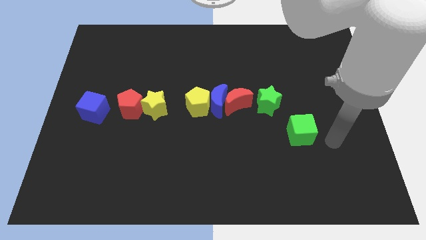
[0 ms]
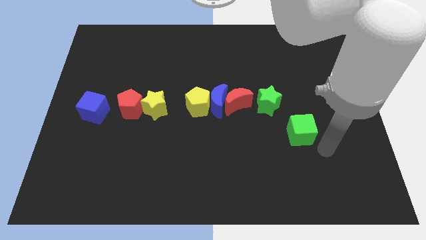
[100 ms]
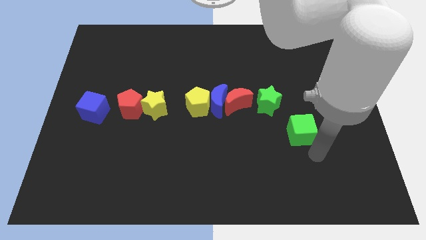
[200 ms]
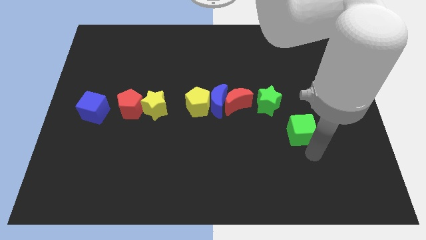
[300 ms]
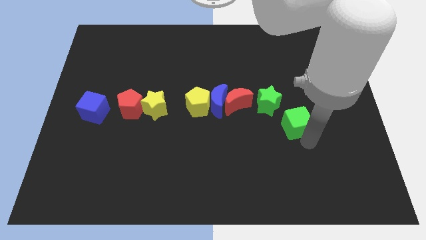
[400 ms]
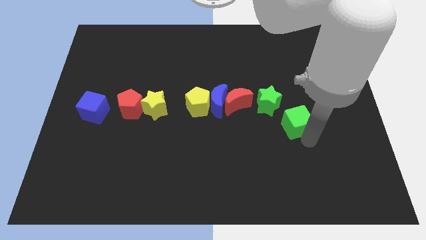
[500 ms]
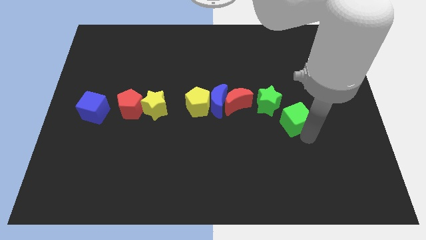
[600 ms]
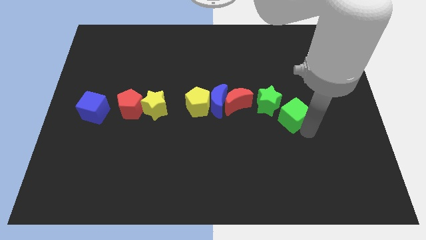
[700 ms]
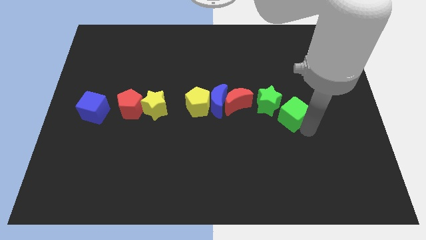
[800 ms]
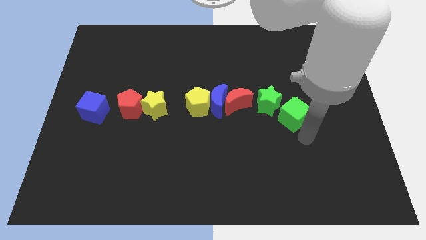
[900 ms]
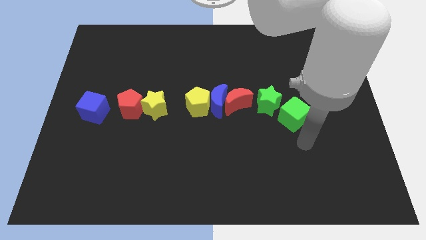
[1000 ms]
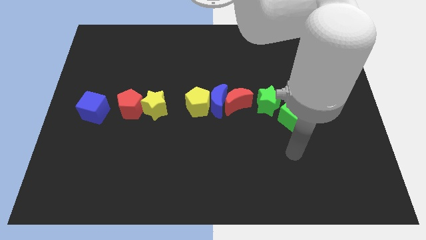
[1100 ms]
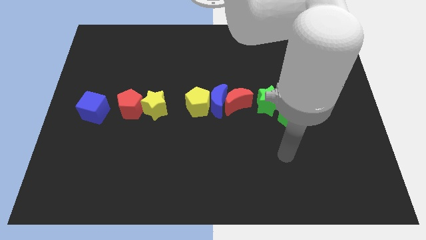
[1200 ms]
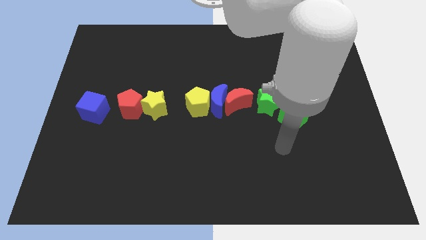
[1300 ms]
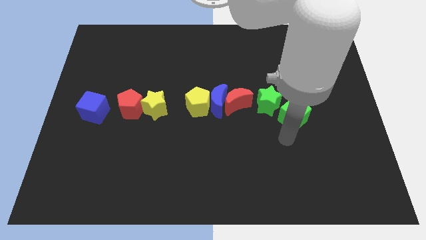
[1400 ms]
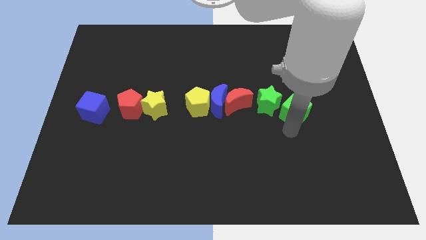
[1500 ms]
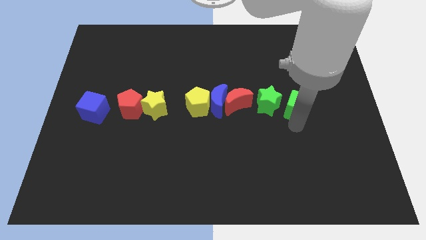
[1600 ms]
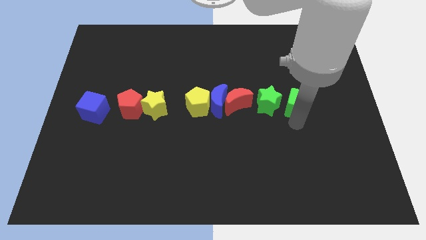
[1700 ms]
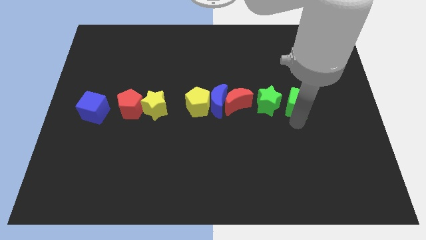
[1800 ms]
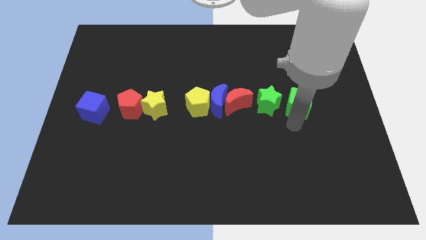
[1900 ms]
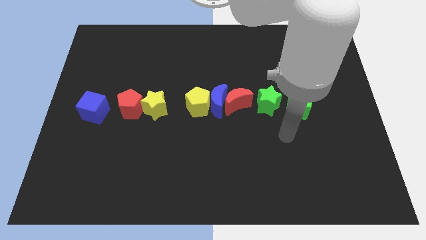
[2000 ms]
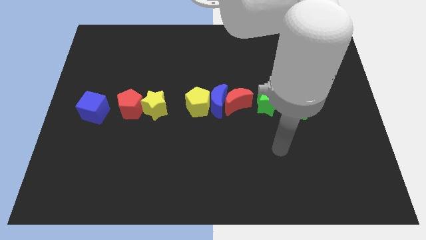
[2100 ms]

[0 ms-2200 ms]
put the green cube in a horizontal line with the other blocks

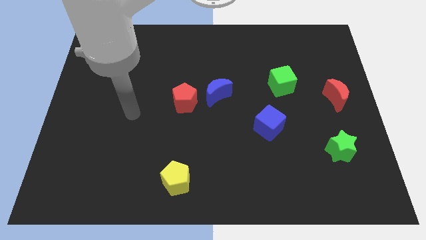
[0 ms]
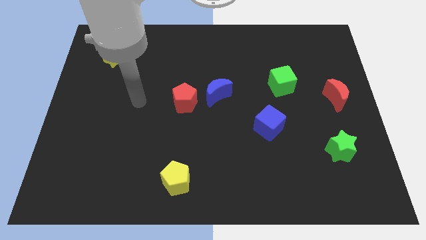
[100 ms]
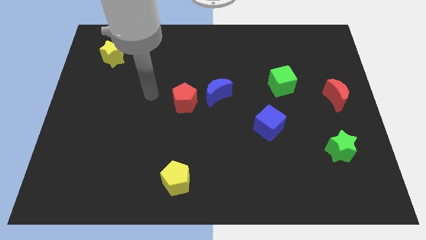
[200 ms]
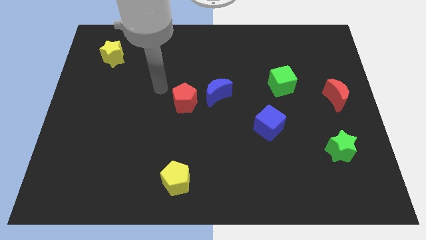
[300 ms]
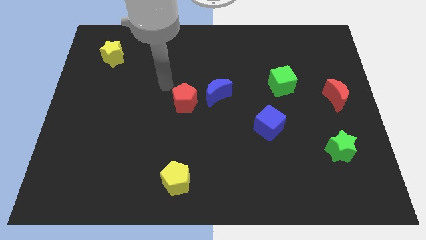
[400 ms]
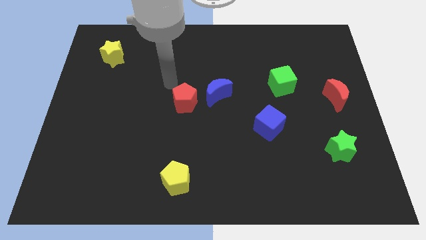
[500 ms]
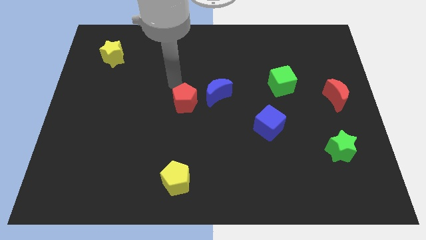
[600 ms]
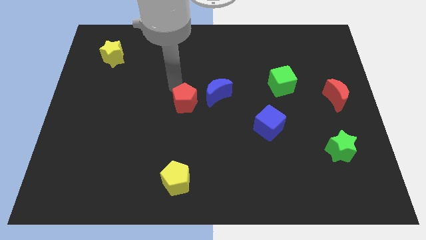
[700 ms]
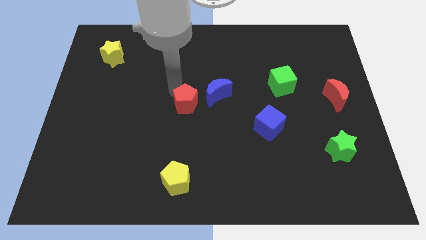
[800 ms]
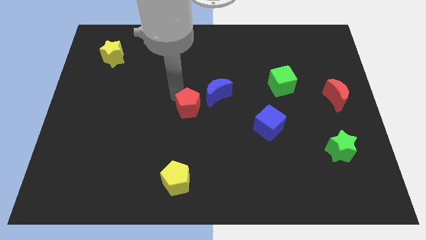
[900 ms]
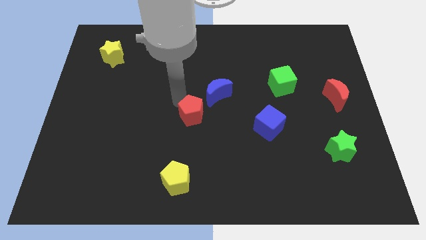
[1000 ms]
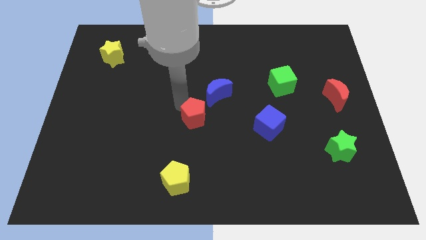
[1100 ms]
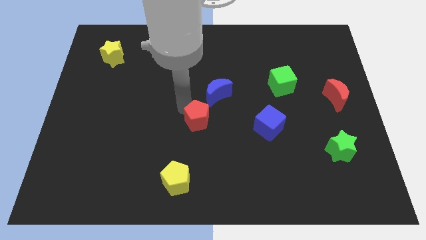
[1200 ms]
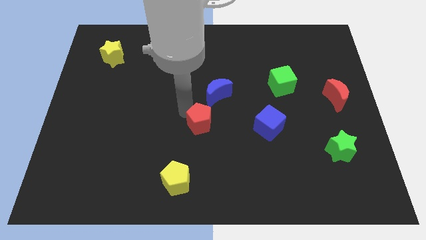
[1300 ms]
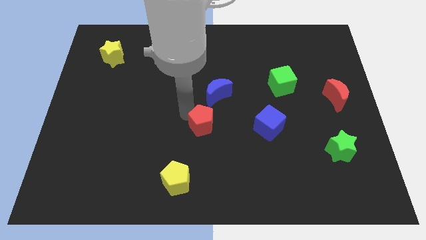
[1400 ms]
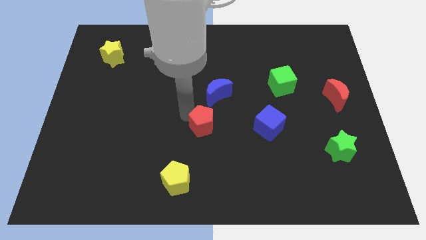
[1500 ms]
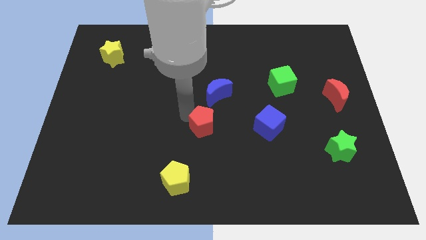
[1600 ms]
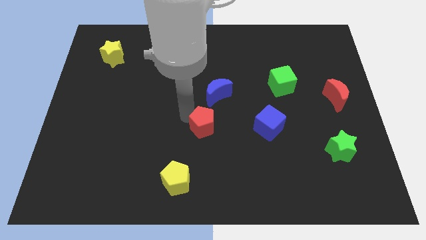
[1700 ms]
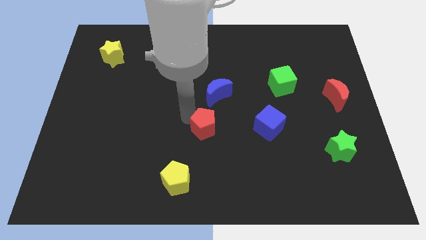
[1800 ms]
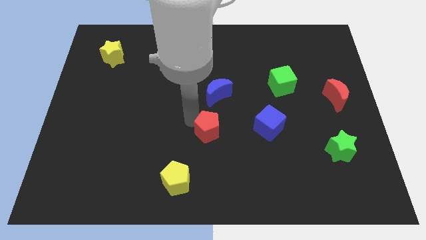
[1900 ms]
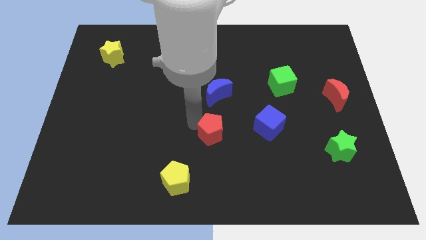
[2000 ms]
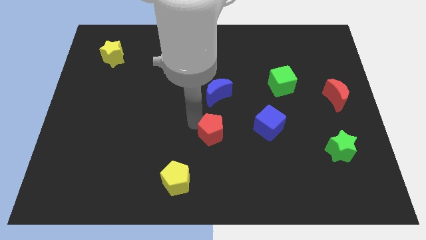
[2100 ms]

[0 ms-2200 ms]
push the red pentagon parallel to the left of blue cube

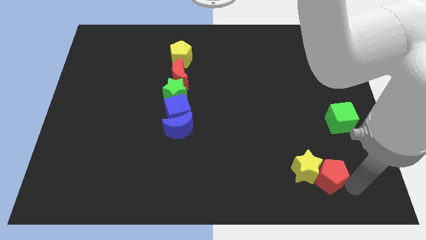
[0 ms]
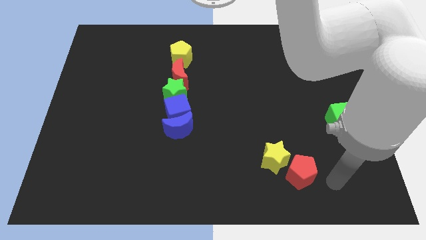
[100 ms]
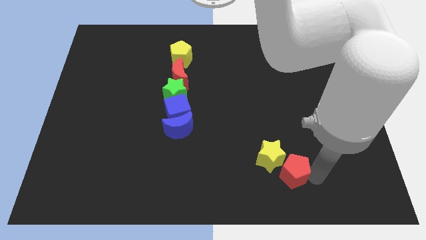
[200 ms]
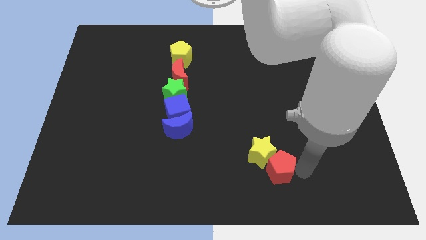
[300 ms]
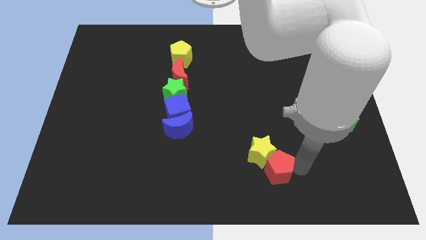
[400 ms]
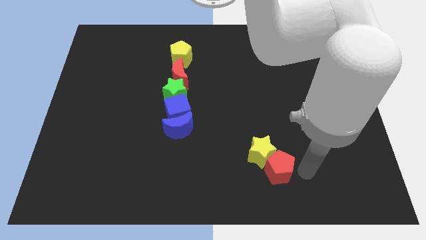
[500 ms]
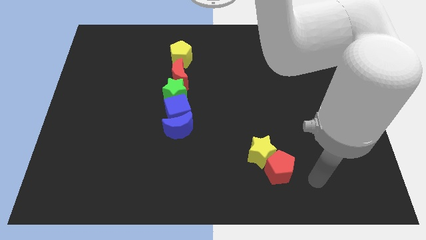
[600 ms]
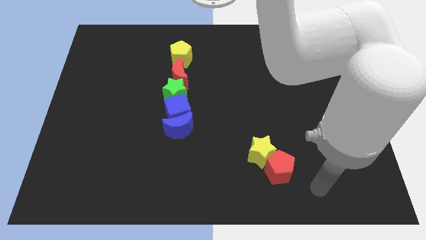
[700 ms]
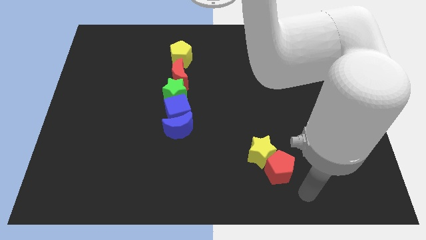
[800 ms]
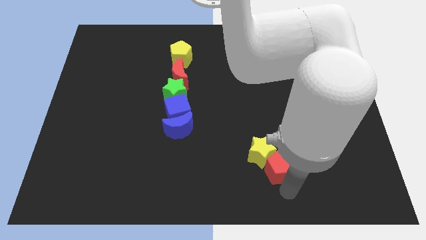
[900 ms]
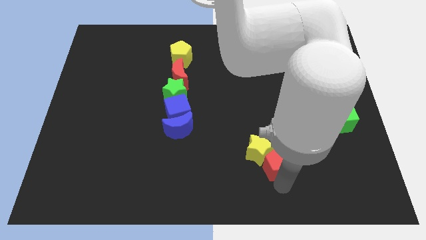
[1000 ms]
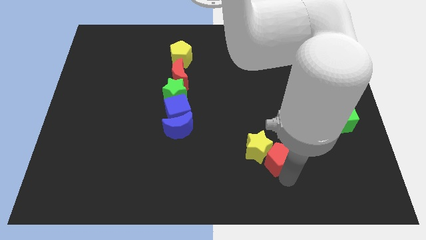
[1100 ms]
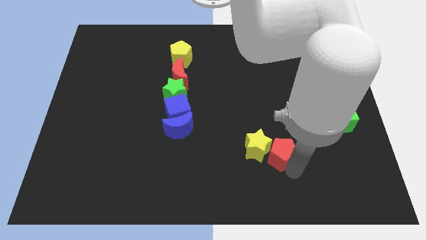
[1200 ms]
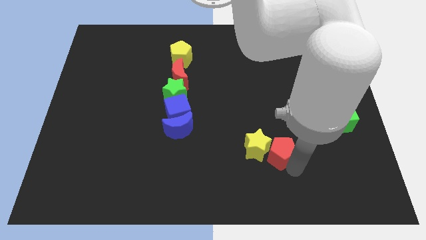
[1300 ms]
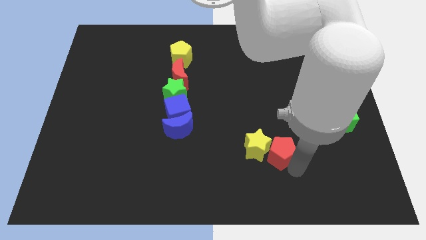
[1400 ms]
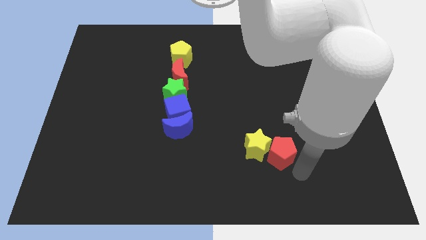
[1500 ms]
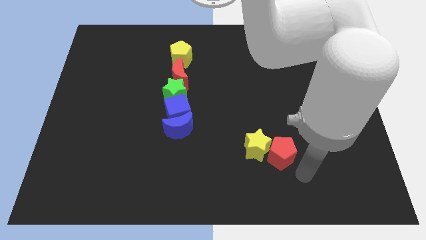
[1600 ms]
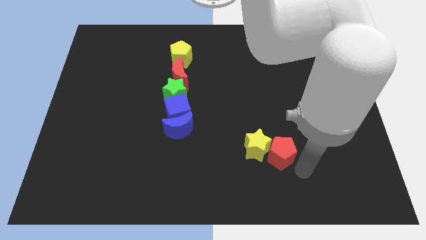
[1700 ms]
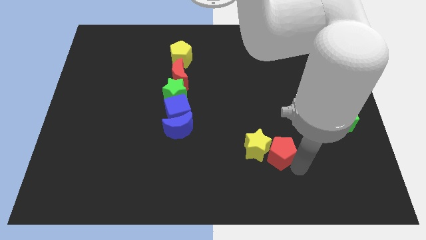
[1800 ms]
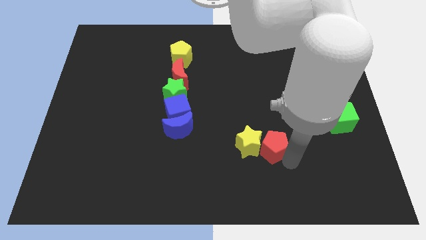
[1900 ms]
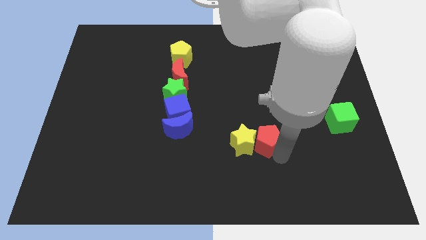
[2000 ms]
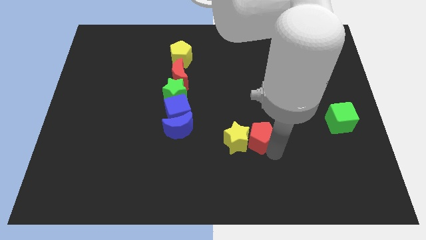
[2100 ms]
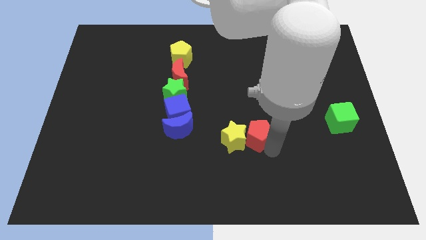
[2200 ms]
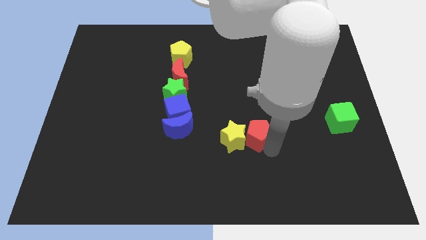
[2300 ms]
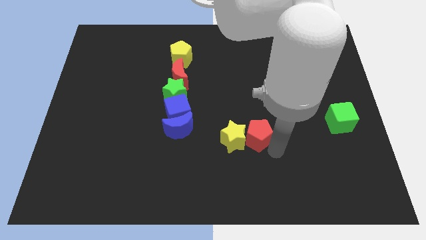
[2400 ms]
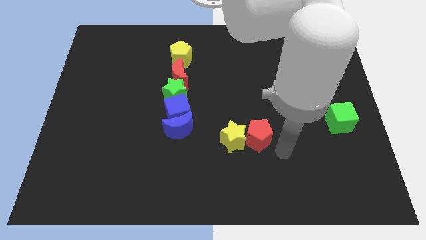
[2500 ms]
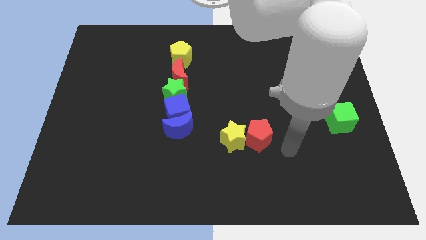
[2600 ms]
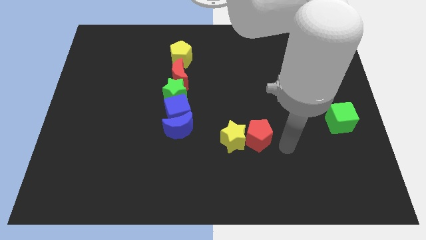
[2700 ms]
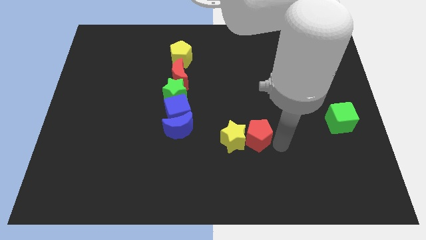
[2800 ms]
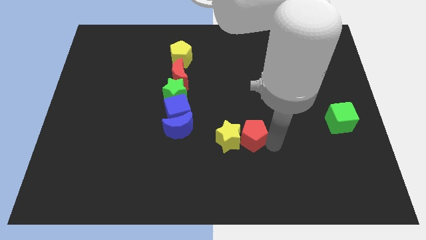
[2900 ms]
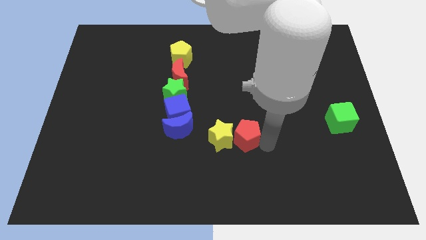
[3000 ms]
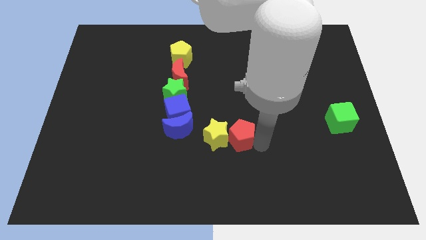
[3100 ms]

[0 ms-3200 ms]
drag the yellow star and red pentagon towards the center of the board

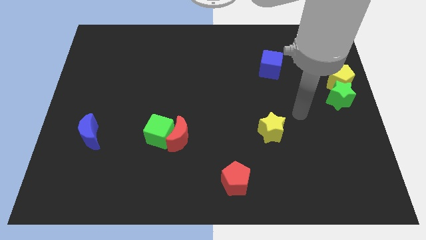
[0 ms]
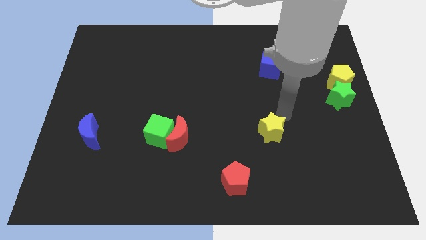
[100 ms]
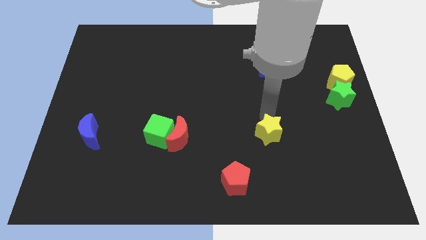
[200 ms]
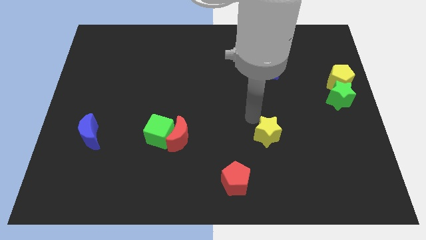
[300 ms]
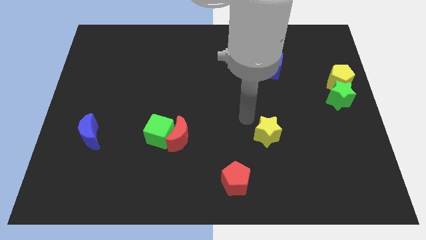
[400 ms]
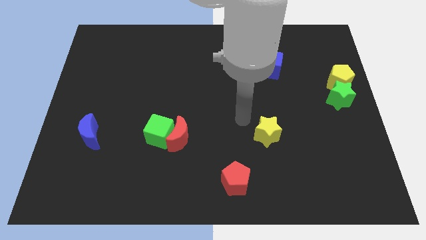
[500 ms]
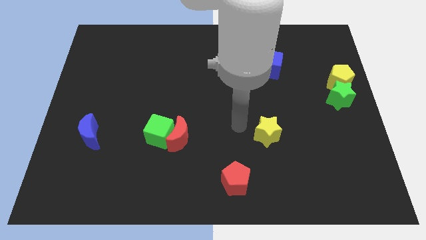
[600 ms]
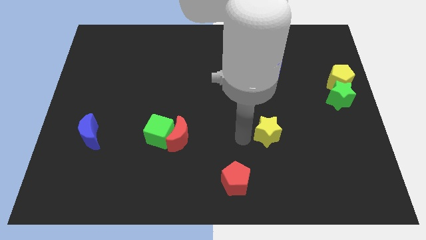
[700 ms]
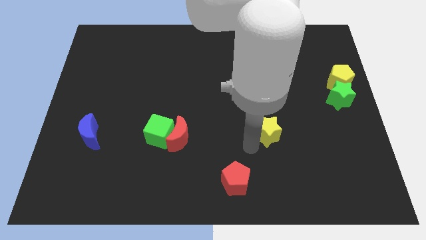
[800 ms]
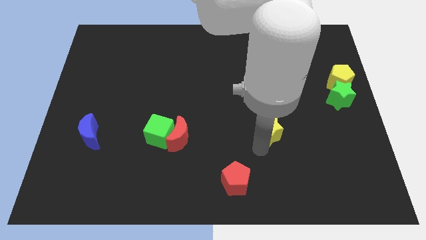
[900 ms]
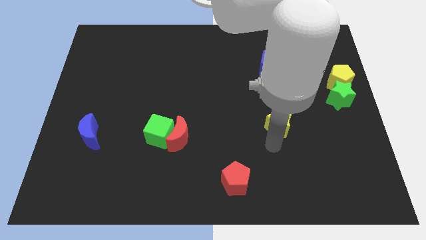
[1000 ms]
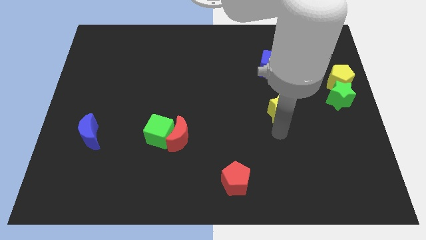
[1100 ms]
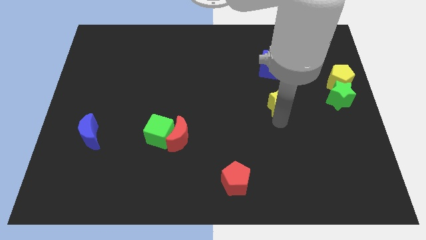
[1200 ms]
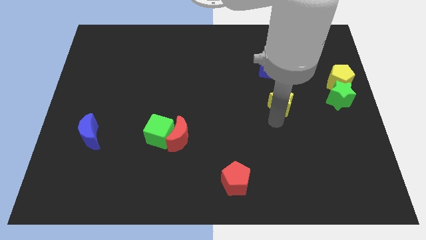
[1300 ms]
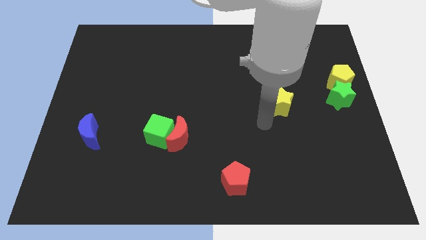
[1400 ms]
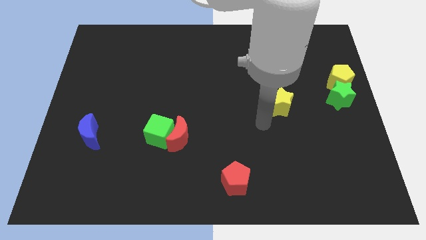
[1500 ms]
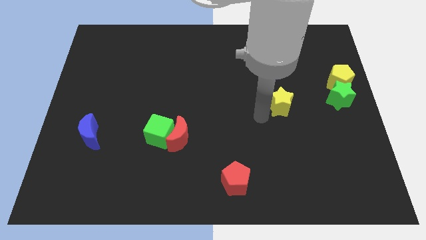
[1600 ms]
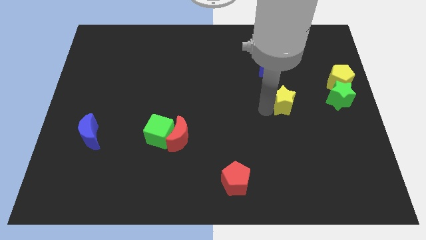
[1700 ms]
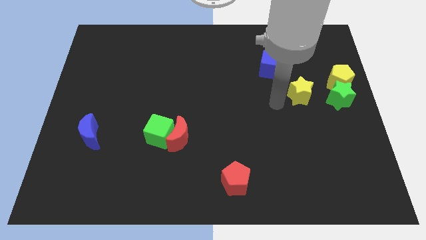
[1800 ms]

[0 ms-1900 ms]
drag the yellow star to the left side of the green star
